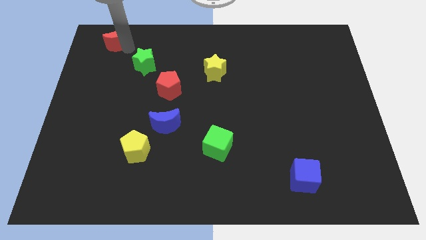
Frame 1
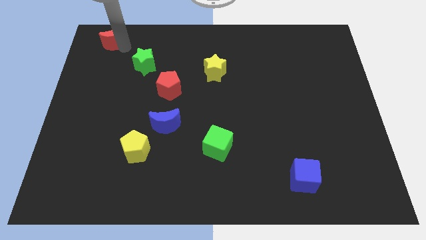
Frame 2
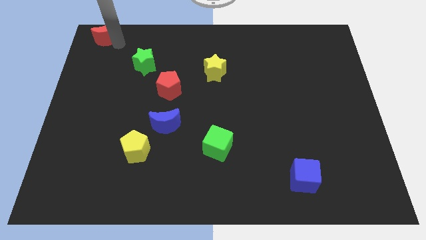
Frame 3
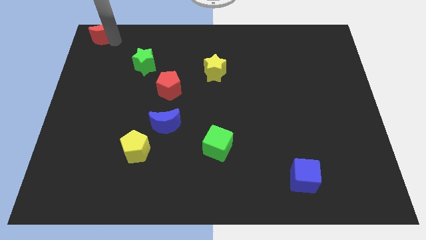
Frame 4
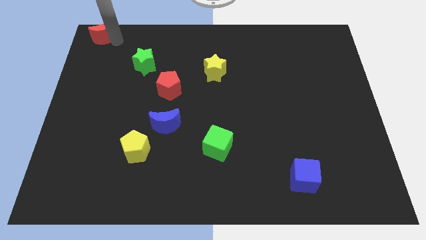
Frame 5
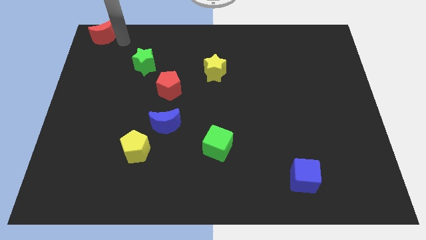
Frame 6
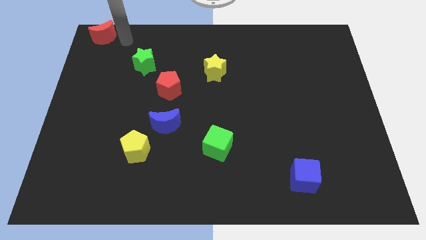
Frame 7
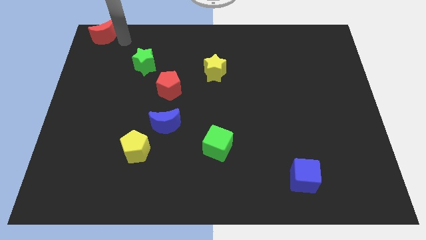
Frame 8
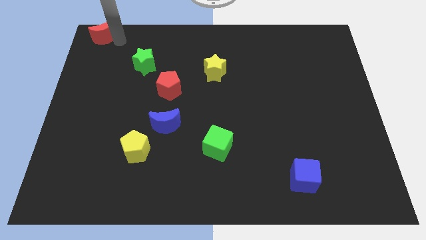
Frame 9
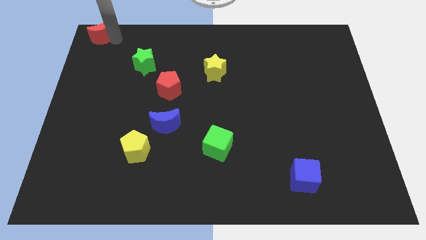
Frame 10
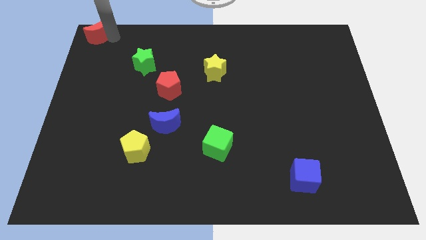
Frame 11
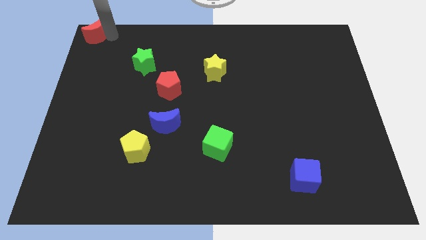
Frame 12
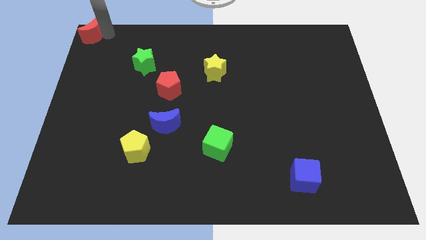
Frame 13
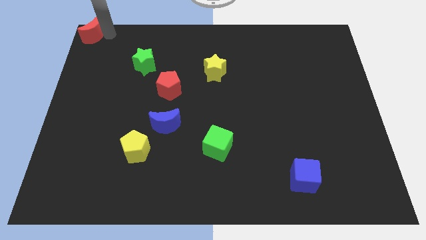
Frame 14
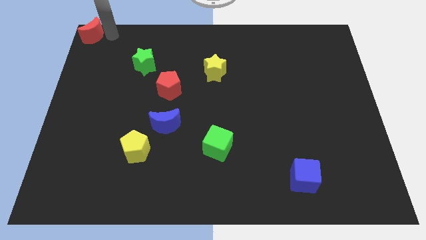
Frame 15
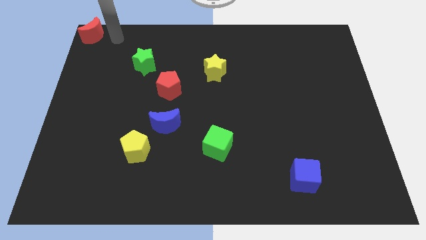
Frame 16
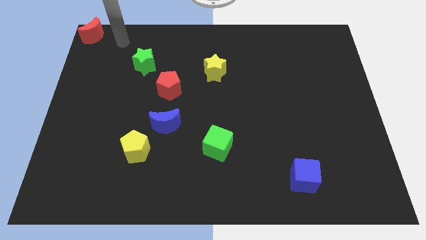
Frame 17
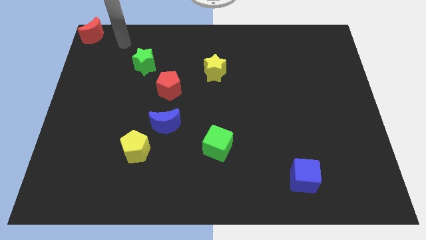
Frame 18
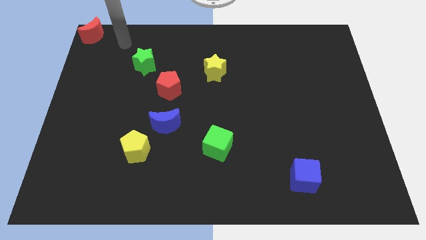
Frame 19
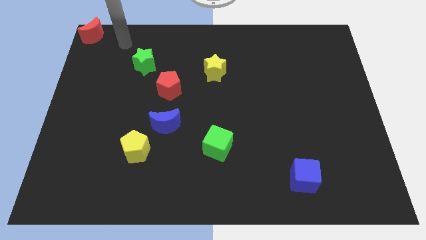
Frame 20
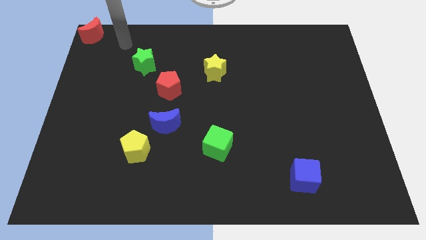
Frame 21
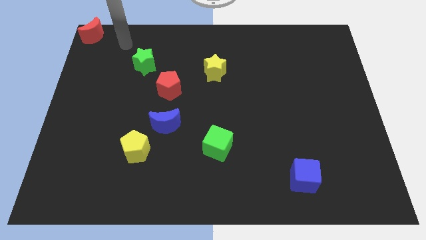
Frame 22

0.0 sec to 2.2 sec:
place the red crescent at the top left corner

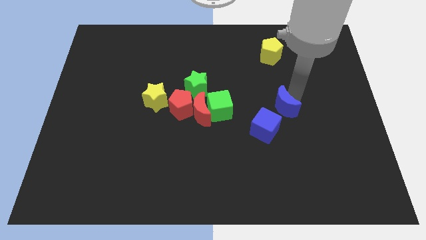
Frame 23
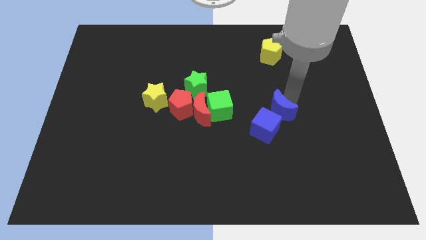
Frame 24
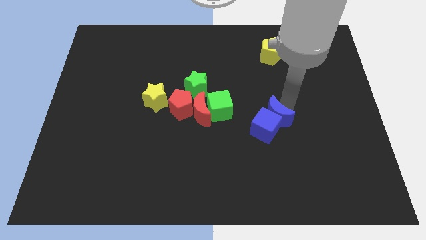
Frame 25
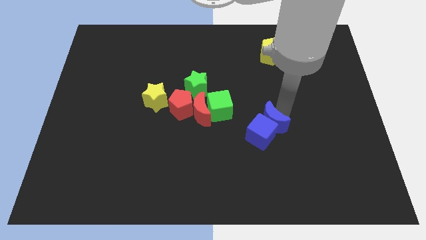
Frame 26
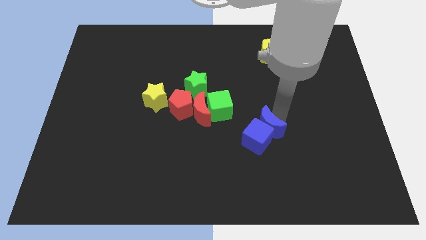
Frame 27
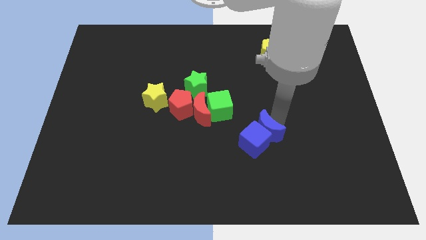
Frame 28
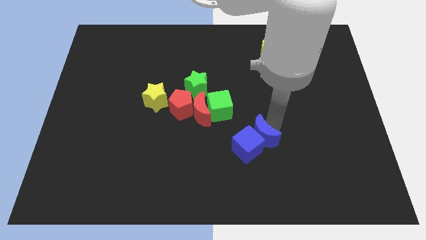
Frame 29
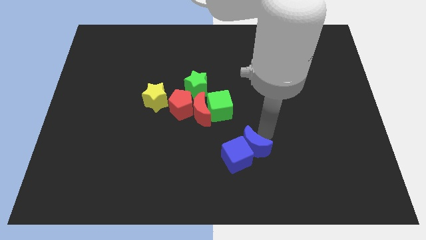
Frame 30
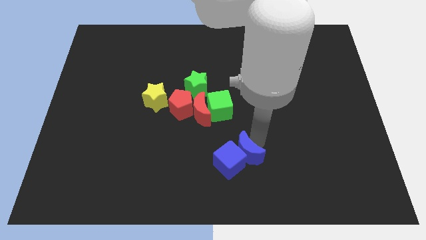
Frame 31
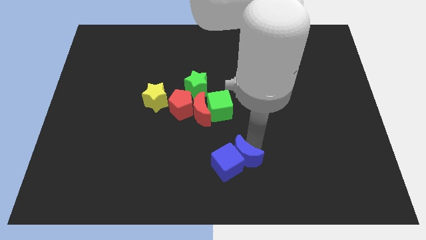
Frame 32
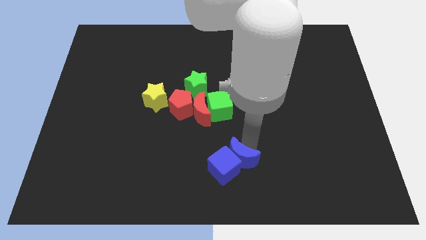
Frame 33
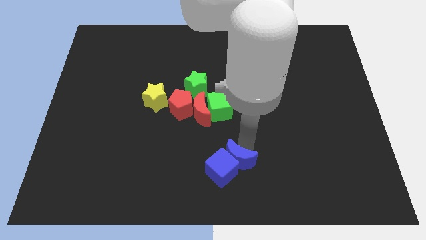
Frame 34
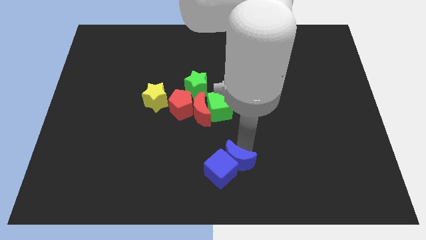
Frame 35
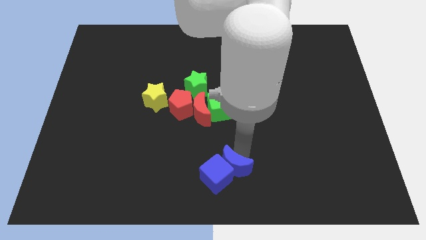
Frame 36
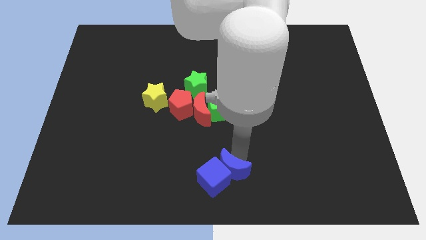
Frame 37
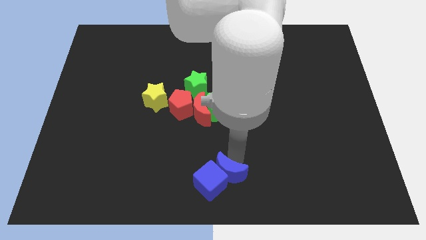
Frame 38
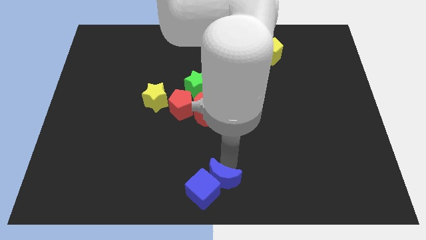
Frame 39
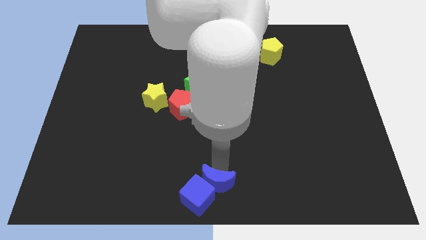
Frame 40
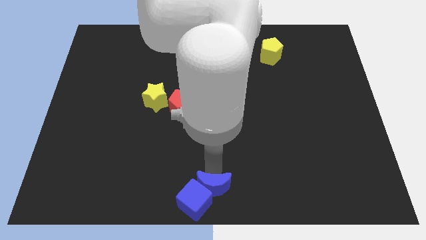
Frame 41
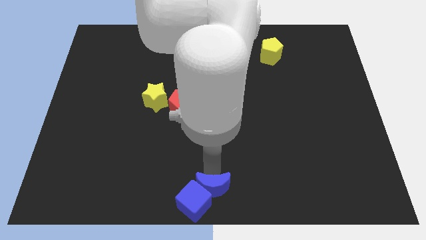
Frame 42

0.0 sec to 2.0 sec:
push the blue cube in the bottom center

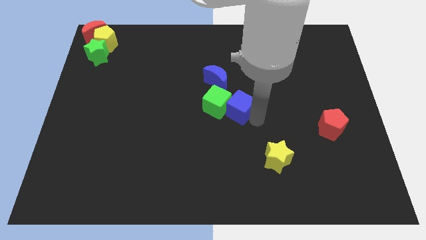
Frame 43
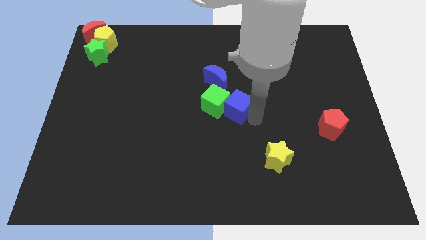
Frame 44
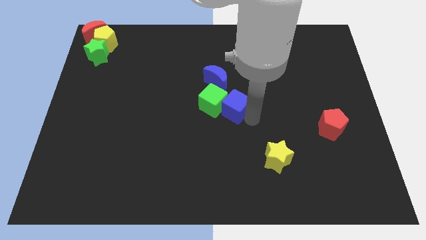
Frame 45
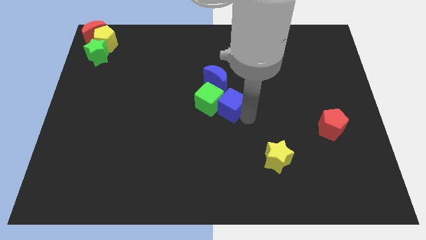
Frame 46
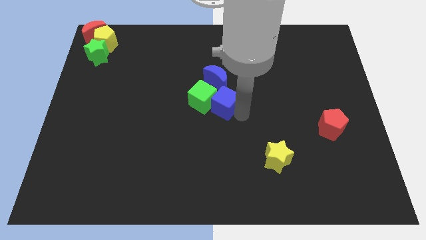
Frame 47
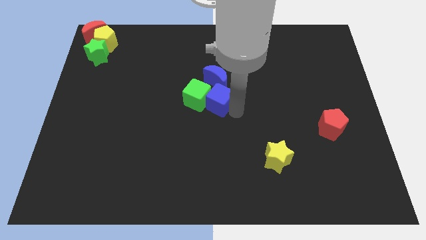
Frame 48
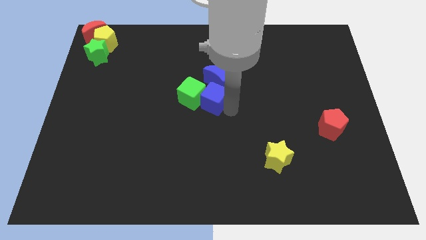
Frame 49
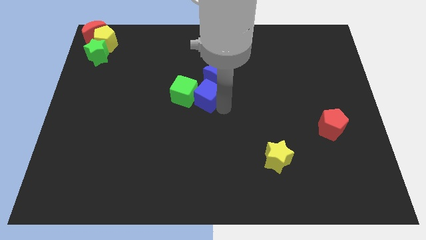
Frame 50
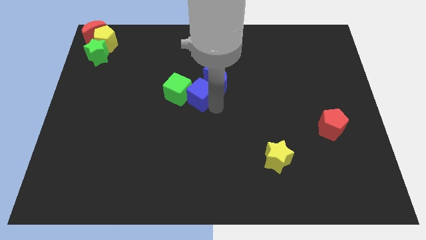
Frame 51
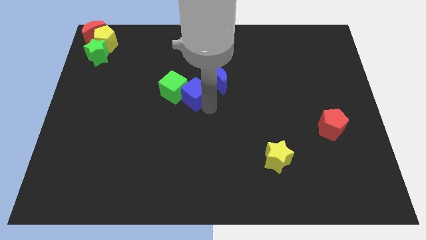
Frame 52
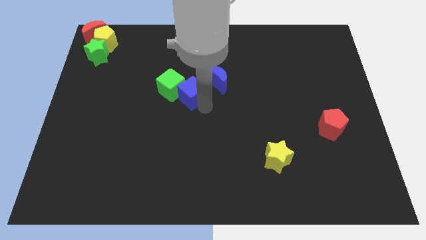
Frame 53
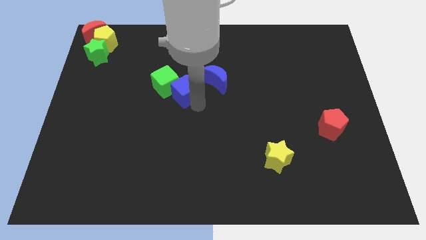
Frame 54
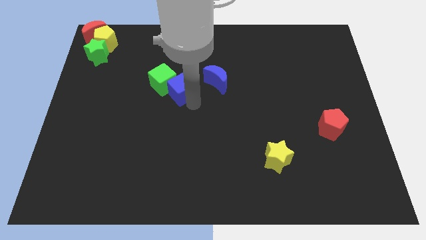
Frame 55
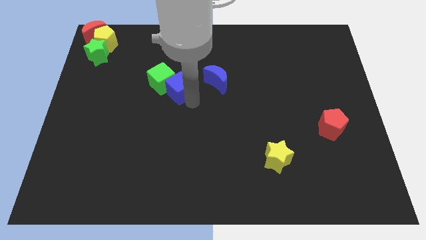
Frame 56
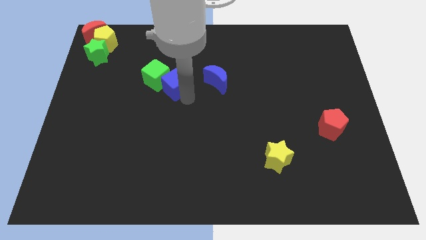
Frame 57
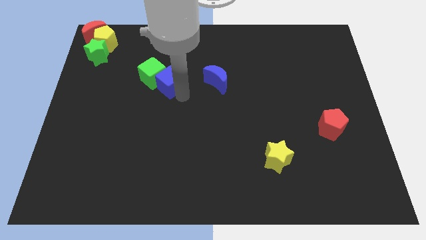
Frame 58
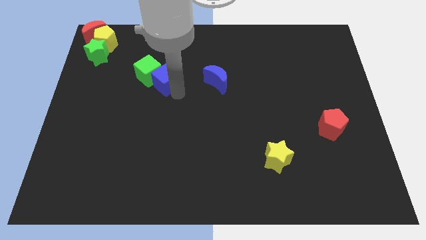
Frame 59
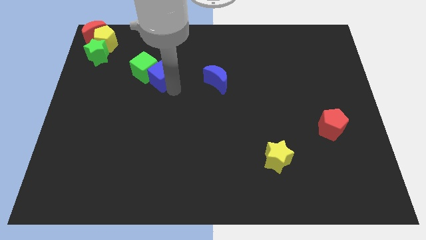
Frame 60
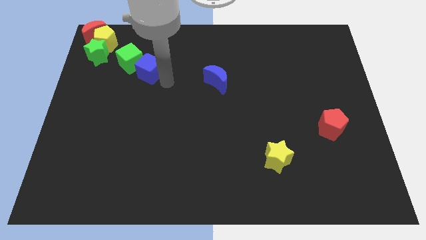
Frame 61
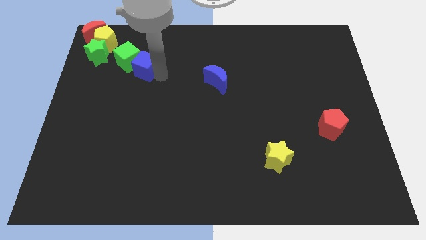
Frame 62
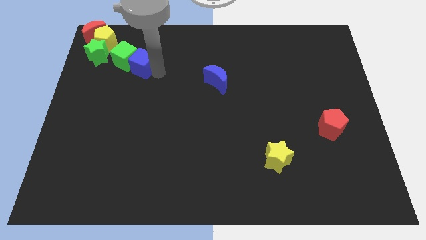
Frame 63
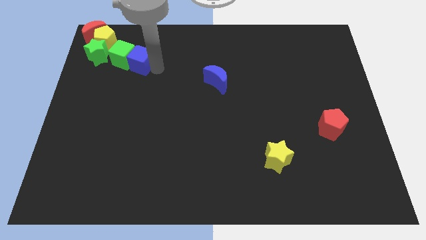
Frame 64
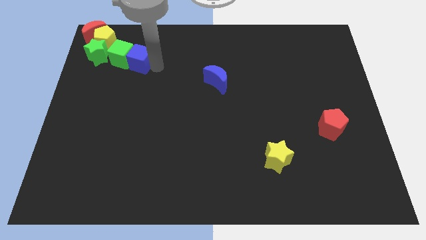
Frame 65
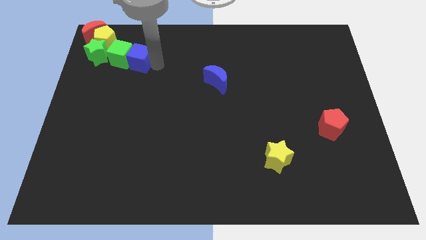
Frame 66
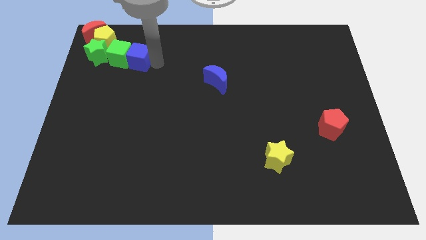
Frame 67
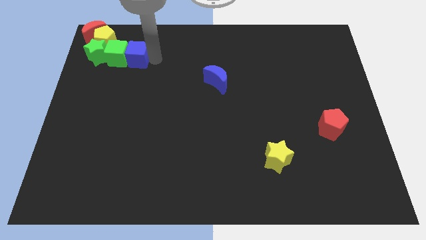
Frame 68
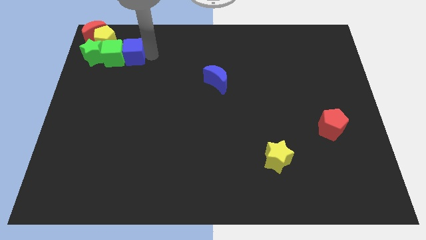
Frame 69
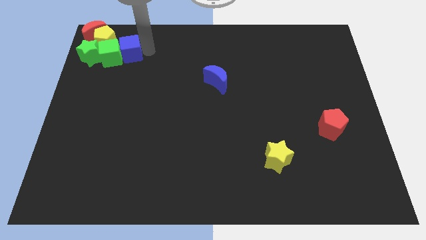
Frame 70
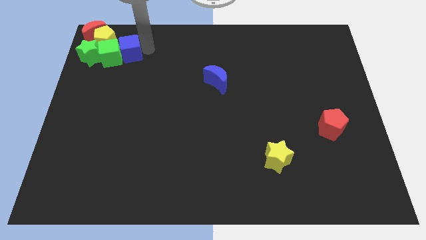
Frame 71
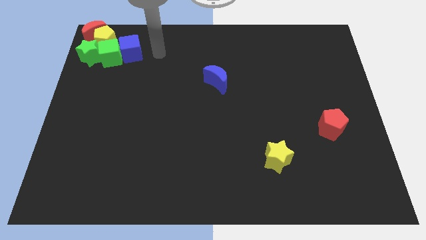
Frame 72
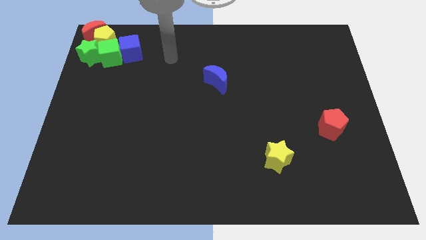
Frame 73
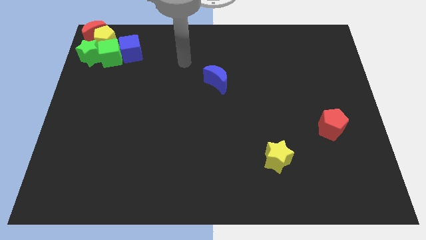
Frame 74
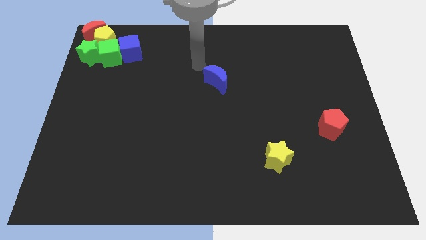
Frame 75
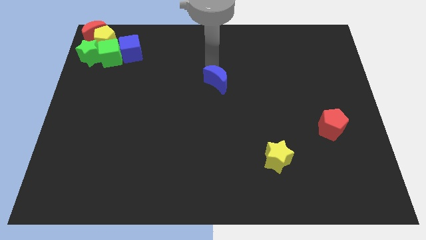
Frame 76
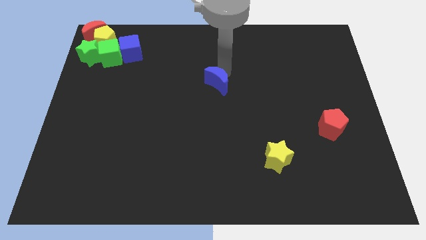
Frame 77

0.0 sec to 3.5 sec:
drag the green cube and blue cube into the yellow pentagon

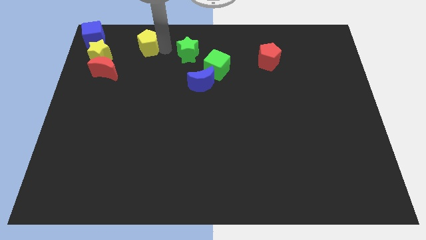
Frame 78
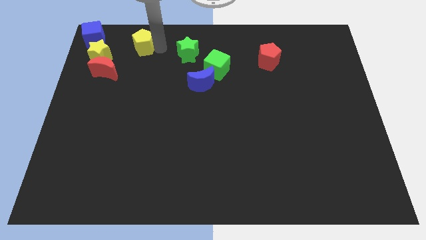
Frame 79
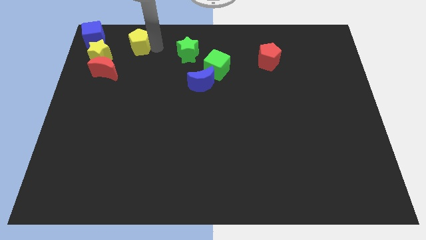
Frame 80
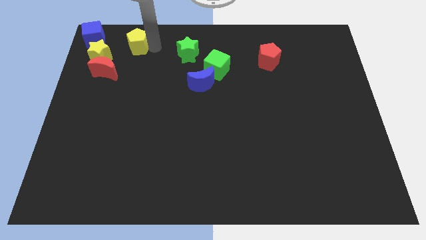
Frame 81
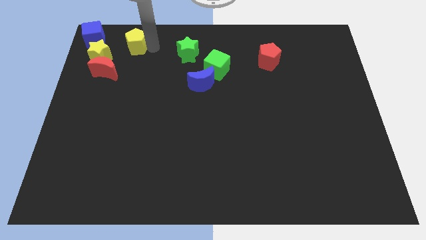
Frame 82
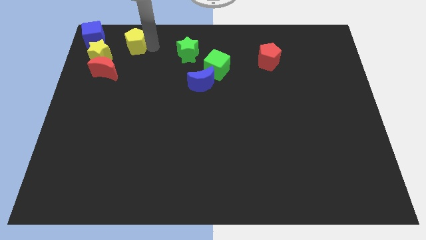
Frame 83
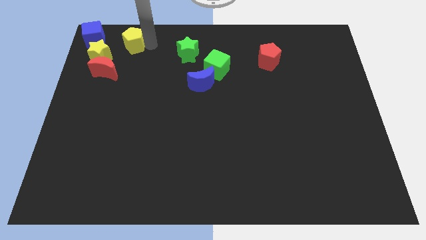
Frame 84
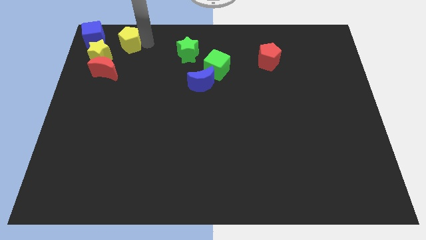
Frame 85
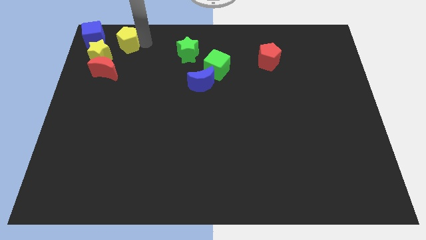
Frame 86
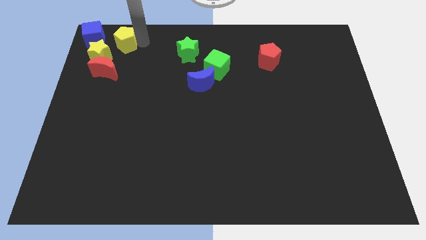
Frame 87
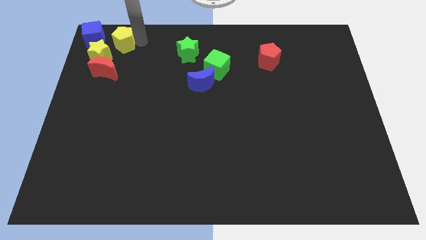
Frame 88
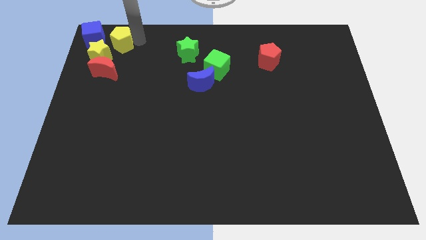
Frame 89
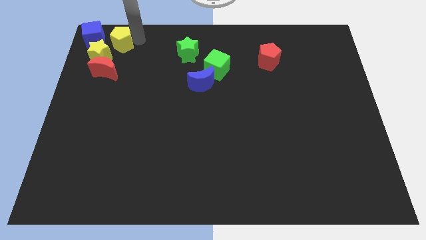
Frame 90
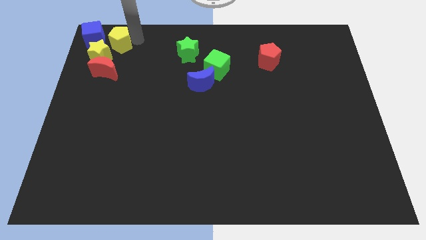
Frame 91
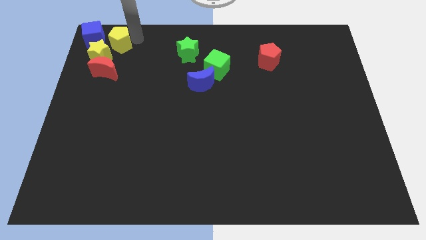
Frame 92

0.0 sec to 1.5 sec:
push the yellow pentagon close to the right side of the yellow star
